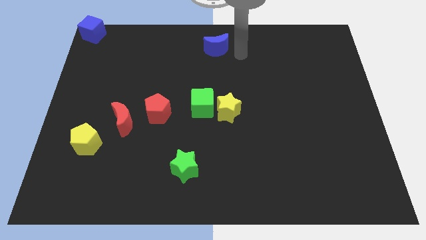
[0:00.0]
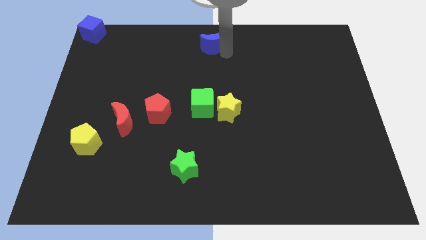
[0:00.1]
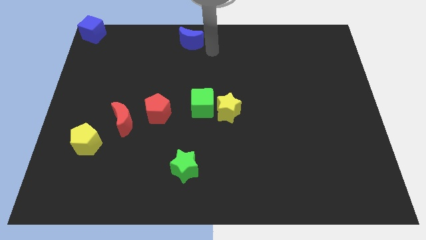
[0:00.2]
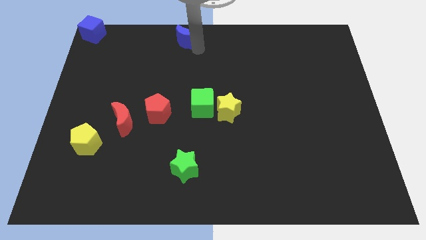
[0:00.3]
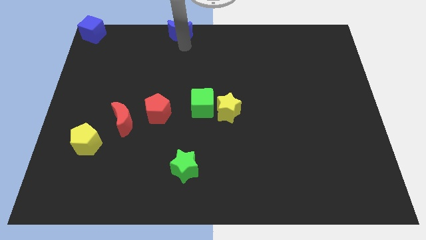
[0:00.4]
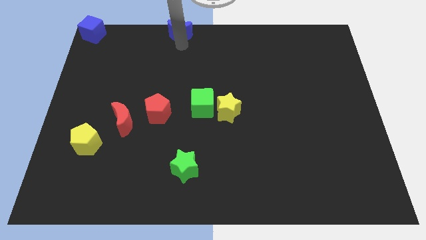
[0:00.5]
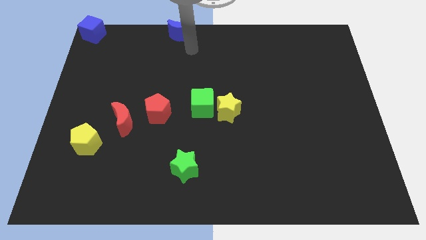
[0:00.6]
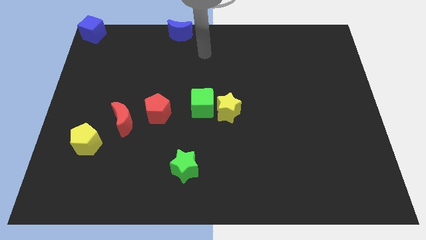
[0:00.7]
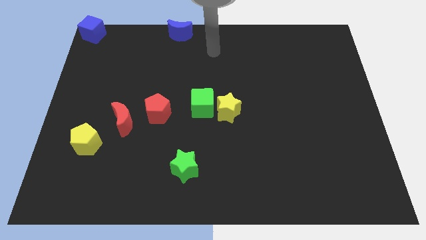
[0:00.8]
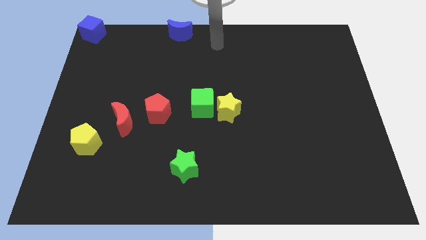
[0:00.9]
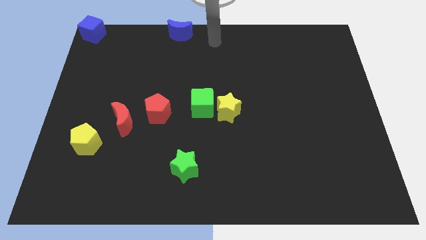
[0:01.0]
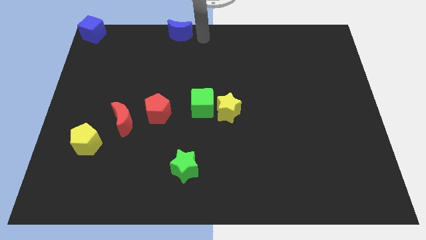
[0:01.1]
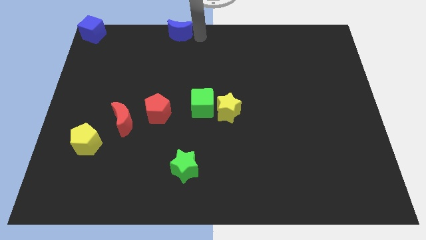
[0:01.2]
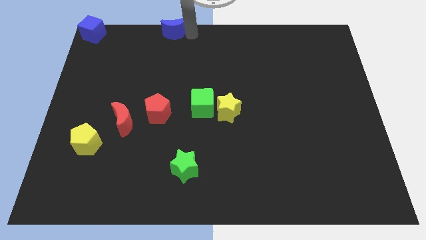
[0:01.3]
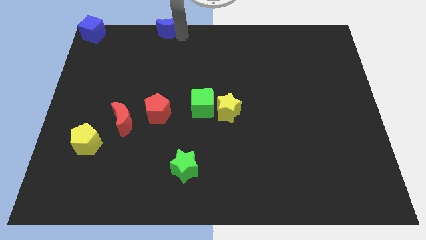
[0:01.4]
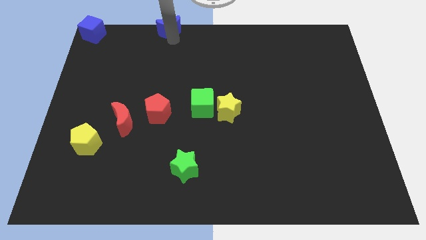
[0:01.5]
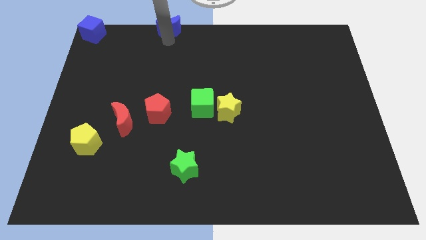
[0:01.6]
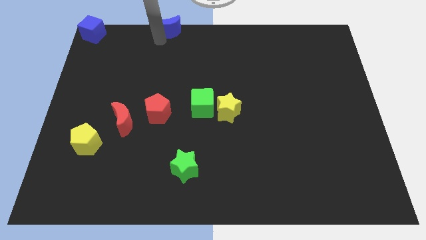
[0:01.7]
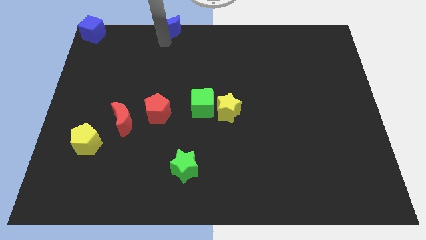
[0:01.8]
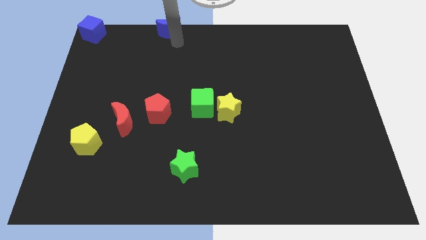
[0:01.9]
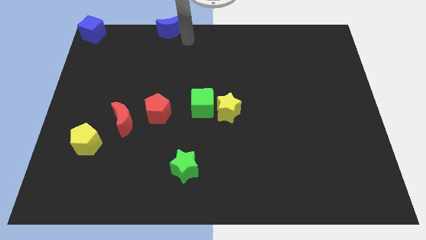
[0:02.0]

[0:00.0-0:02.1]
place the blue crescent to the top left of the board

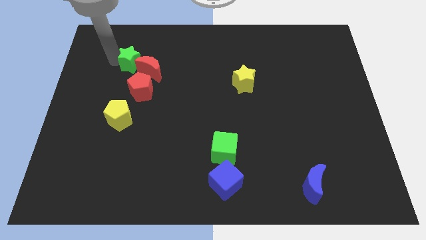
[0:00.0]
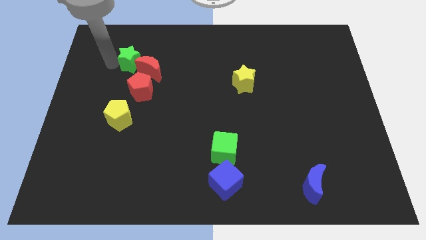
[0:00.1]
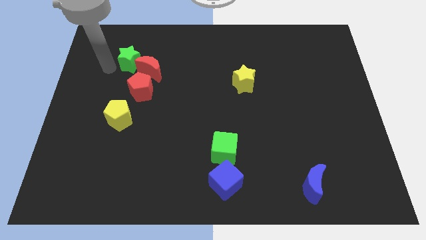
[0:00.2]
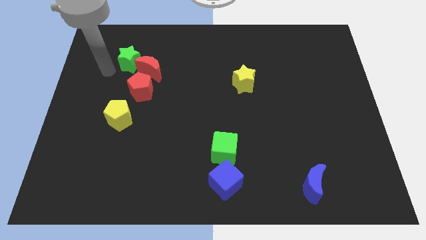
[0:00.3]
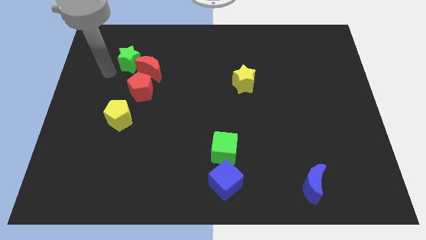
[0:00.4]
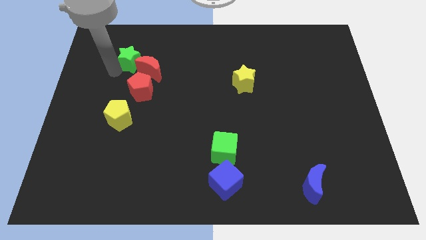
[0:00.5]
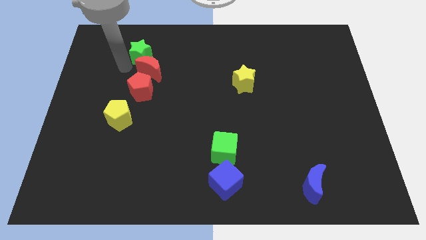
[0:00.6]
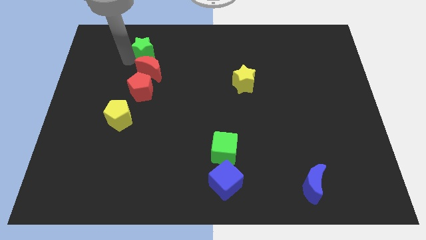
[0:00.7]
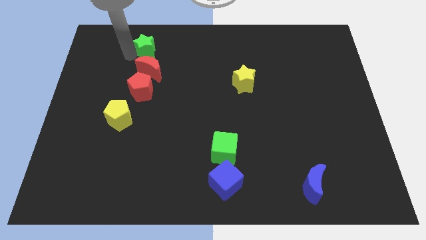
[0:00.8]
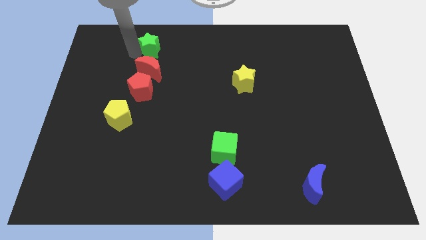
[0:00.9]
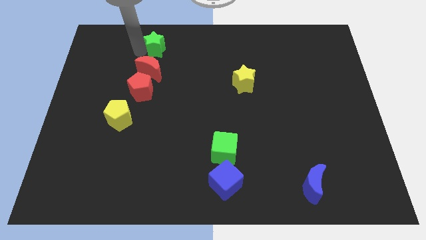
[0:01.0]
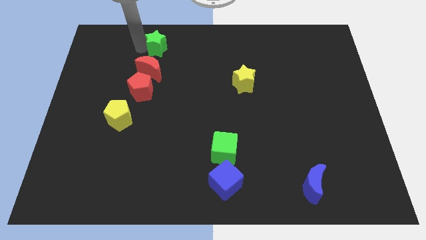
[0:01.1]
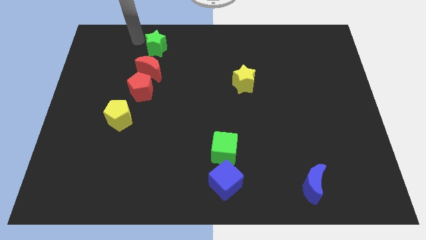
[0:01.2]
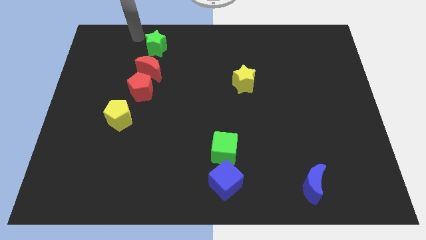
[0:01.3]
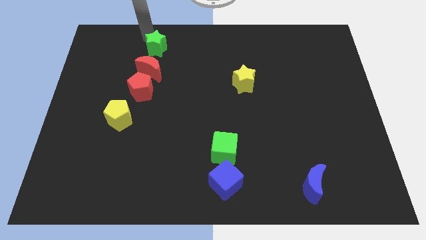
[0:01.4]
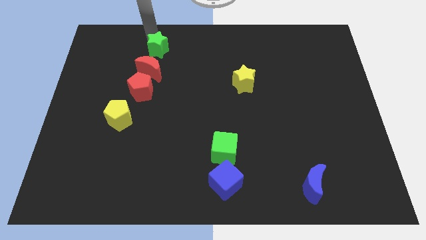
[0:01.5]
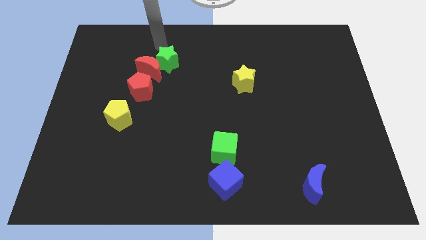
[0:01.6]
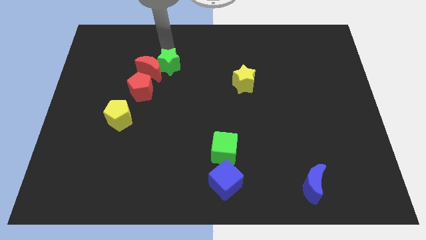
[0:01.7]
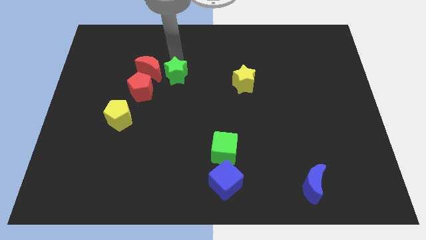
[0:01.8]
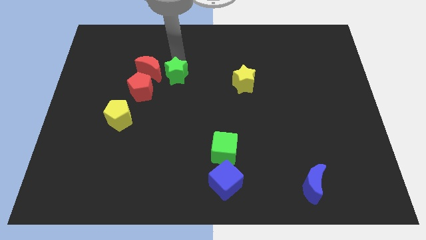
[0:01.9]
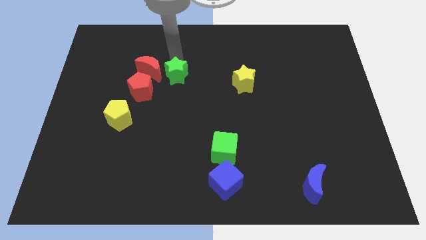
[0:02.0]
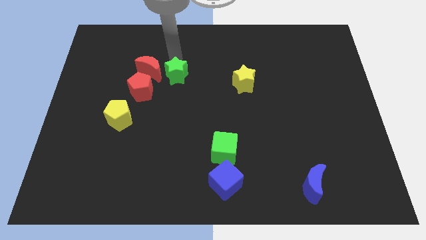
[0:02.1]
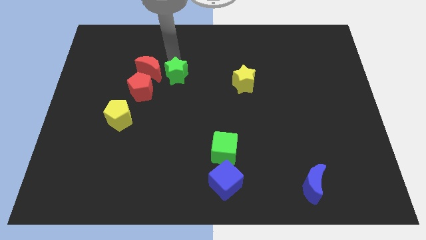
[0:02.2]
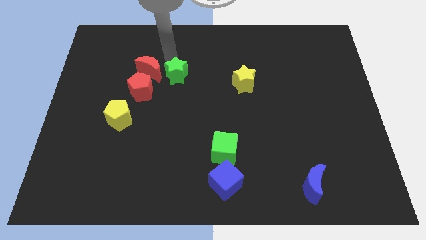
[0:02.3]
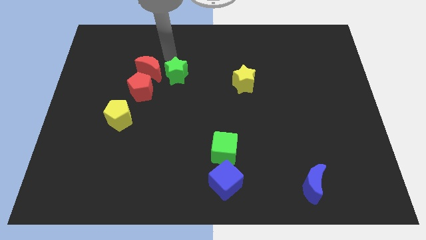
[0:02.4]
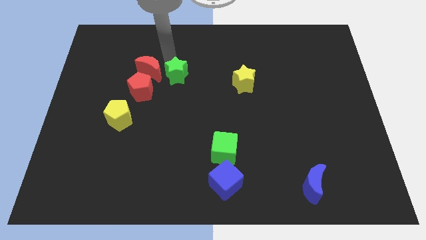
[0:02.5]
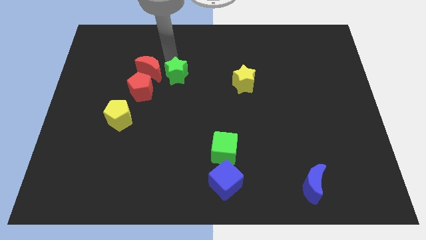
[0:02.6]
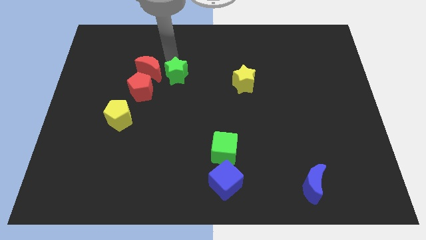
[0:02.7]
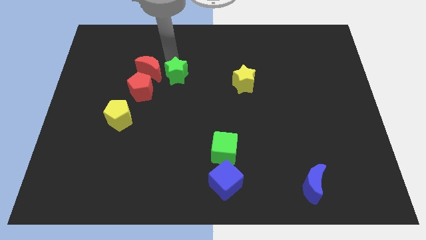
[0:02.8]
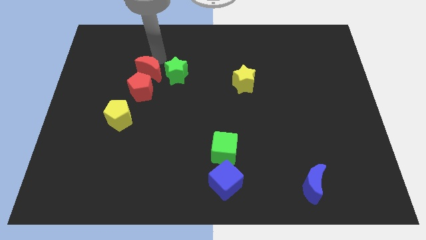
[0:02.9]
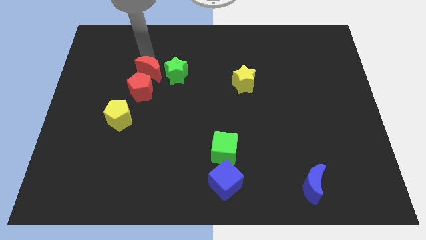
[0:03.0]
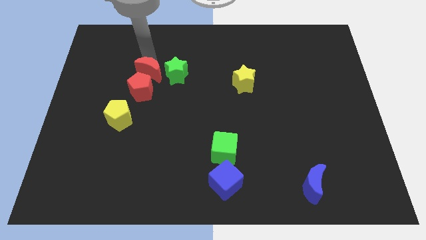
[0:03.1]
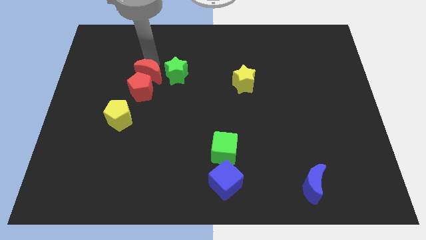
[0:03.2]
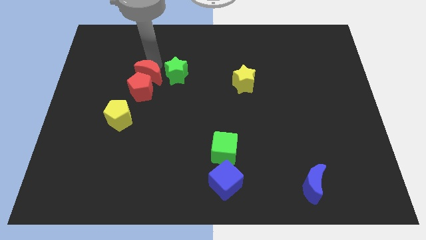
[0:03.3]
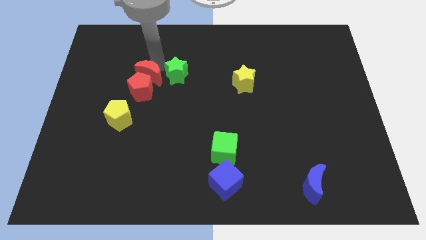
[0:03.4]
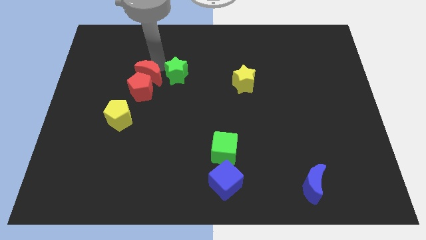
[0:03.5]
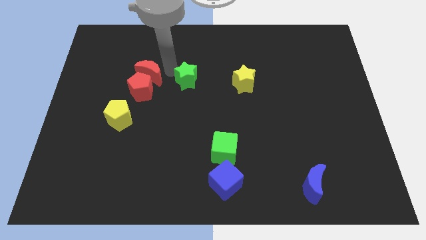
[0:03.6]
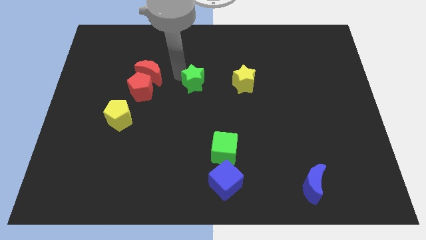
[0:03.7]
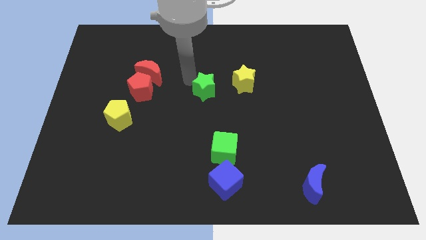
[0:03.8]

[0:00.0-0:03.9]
push the green star parallel to the yellow star

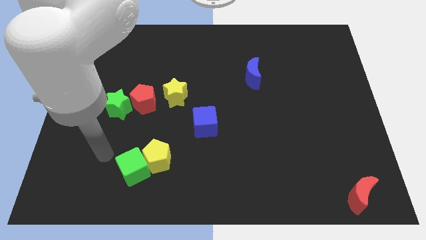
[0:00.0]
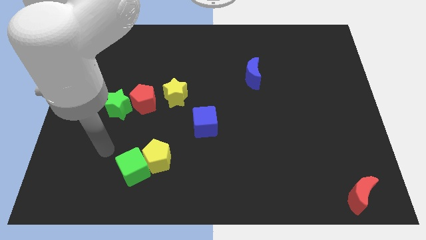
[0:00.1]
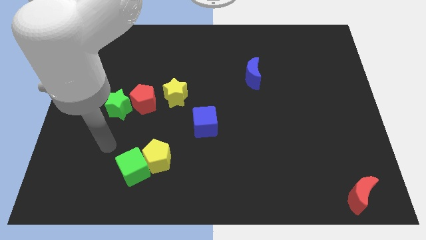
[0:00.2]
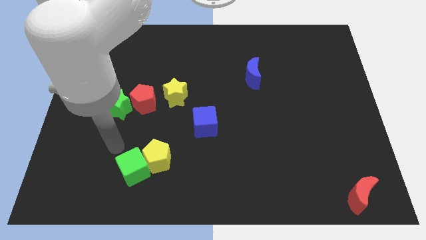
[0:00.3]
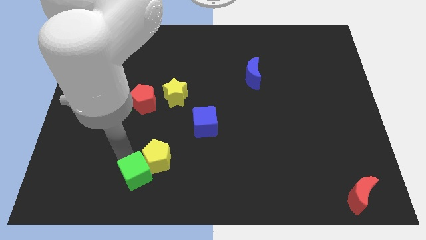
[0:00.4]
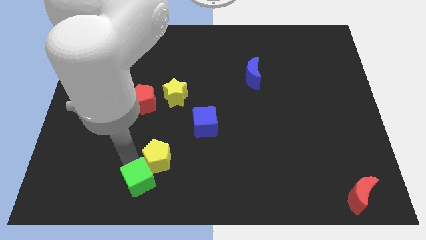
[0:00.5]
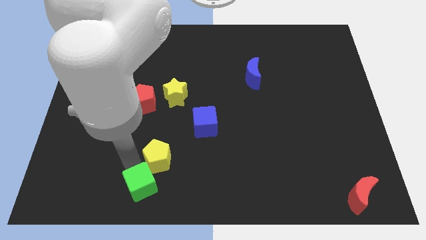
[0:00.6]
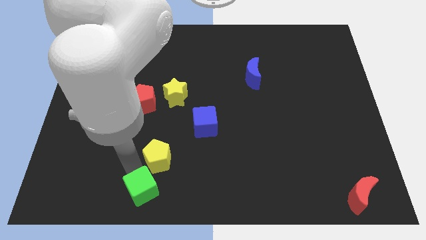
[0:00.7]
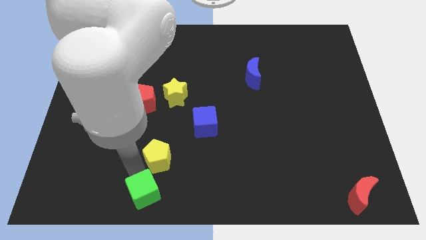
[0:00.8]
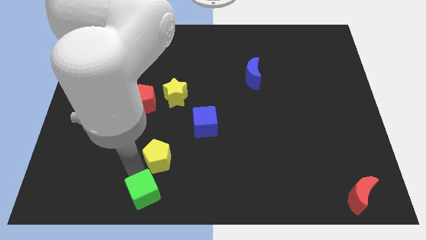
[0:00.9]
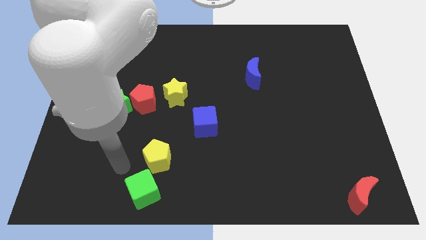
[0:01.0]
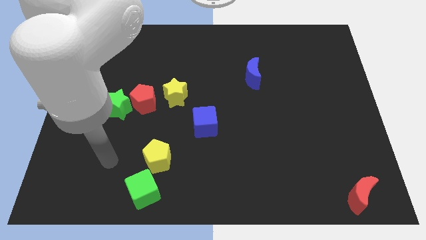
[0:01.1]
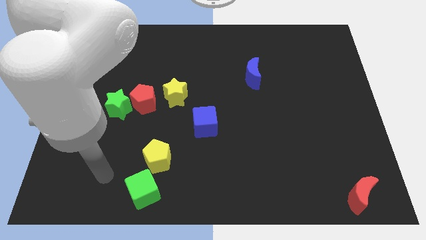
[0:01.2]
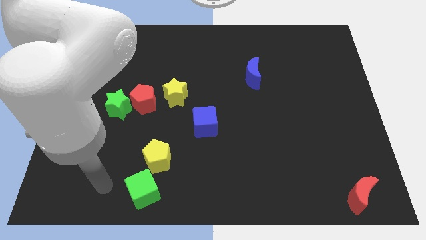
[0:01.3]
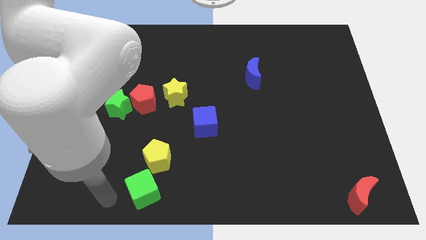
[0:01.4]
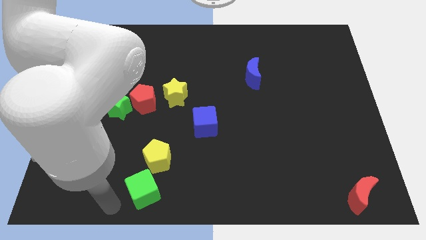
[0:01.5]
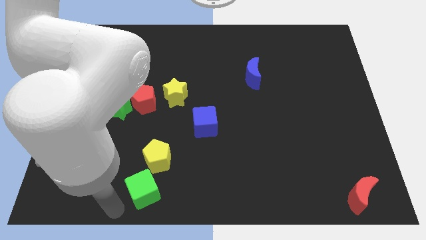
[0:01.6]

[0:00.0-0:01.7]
push the green cube to the bottom of the board

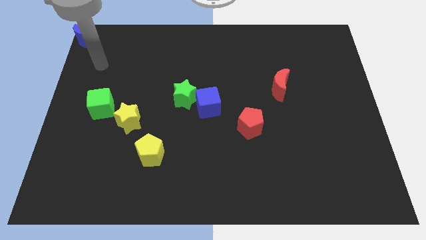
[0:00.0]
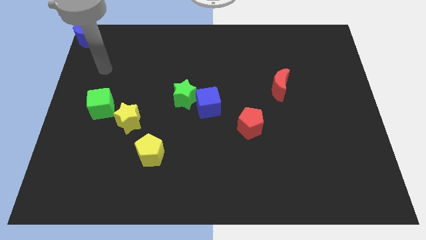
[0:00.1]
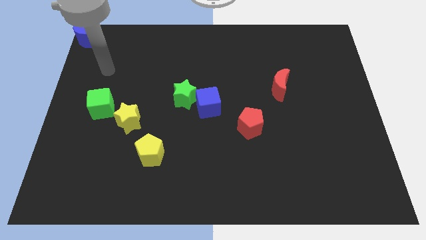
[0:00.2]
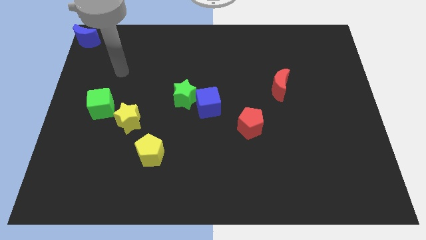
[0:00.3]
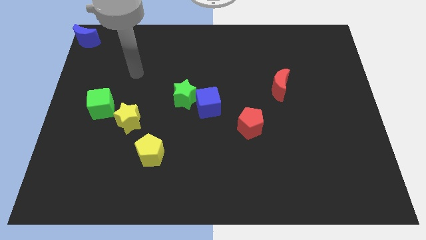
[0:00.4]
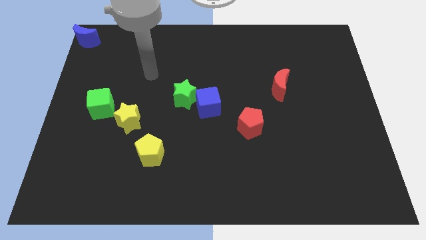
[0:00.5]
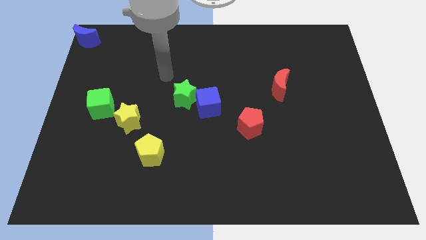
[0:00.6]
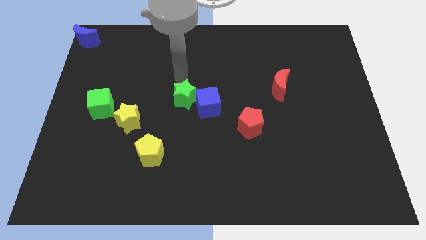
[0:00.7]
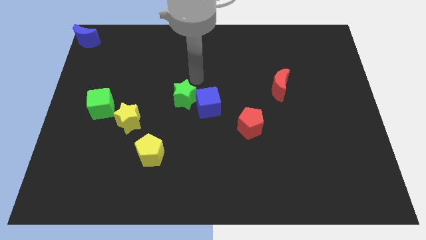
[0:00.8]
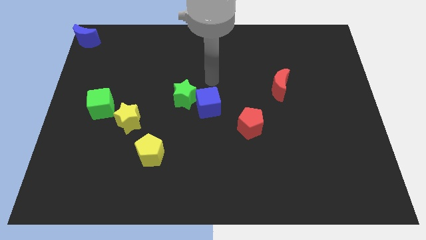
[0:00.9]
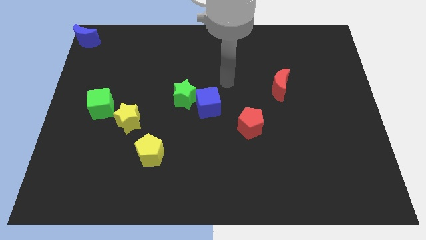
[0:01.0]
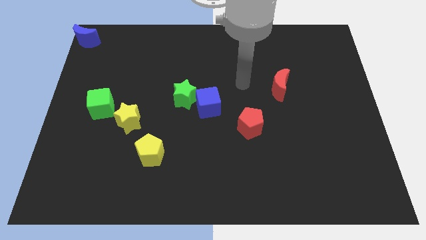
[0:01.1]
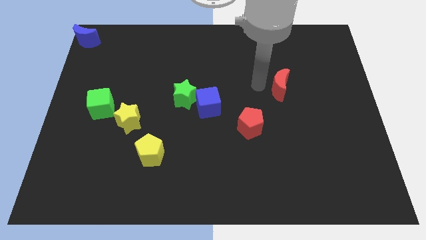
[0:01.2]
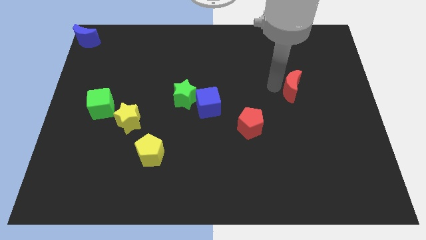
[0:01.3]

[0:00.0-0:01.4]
move your arm towards the red crescent
